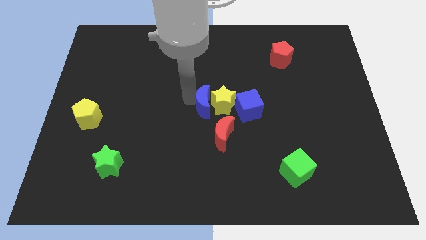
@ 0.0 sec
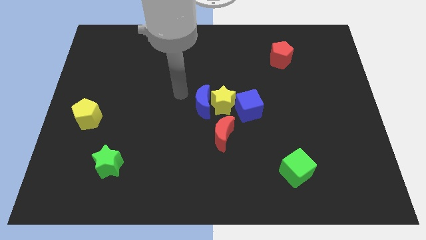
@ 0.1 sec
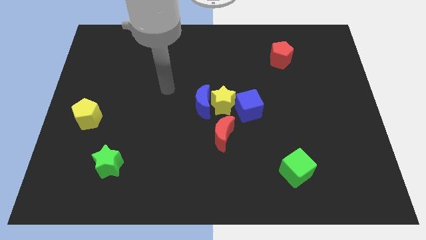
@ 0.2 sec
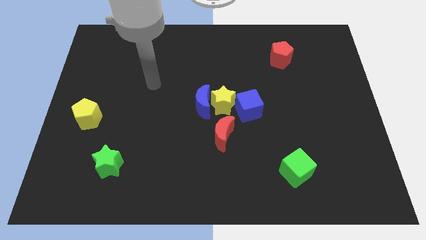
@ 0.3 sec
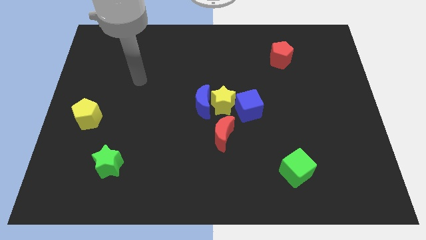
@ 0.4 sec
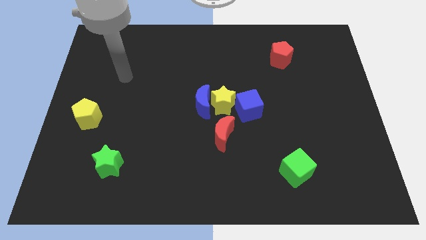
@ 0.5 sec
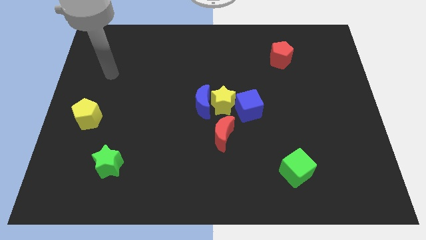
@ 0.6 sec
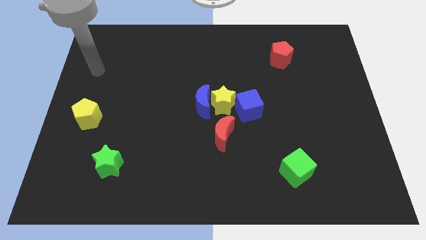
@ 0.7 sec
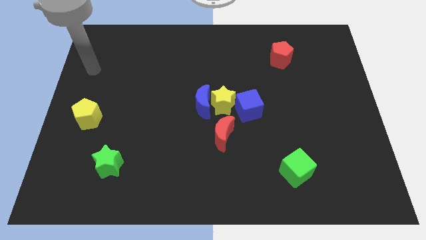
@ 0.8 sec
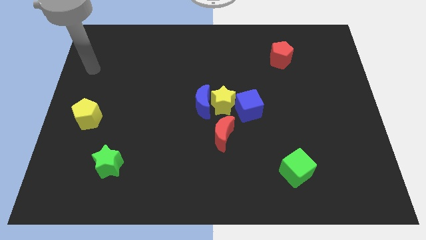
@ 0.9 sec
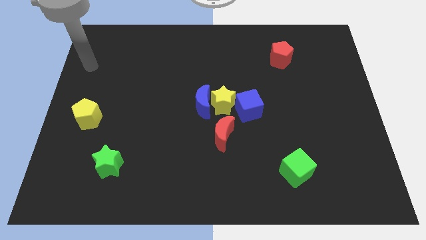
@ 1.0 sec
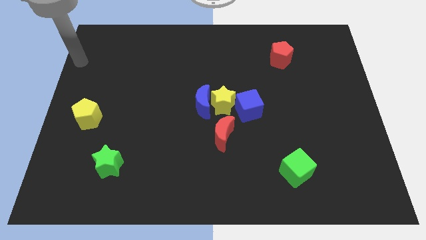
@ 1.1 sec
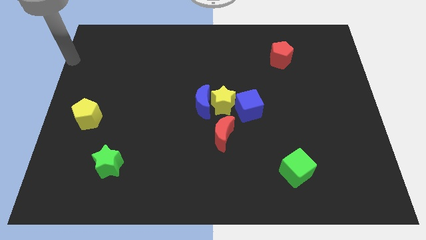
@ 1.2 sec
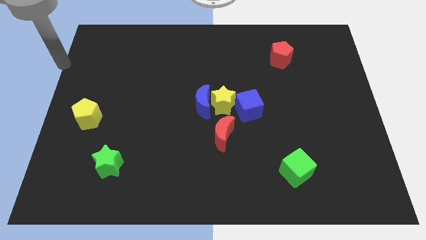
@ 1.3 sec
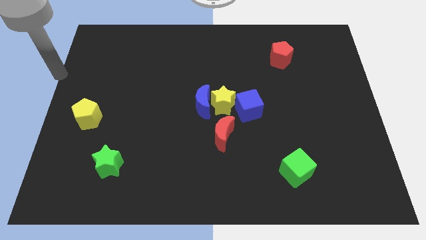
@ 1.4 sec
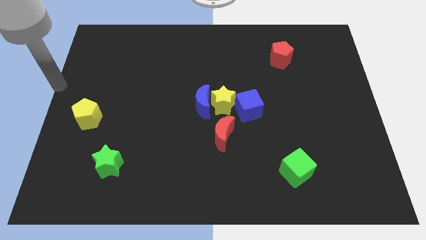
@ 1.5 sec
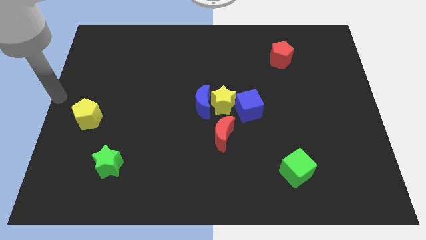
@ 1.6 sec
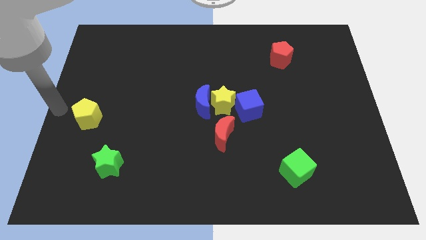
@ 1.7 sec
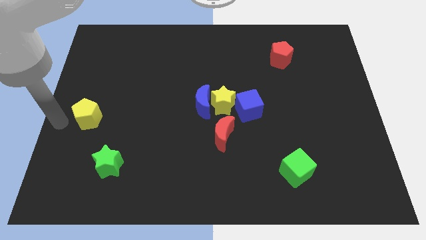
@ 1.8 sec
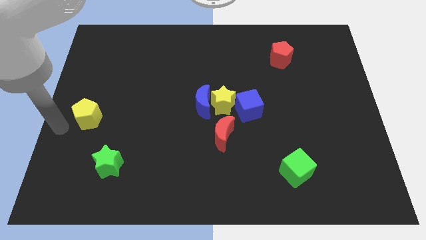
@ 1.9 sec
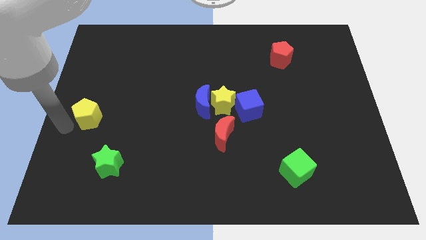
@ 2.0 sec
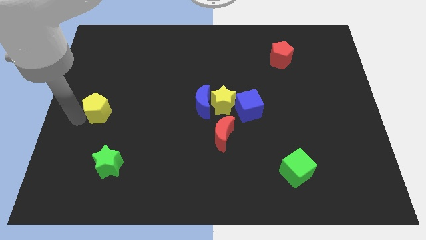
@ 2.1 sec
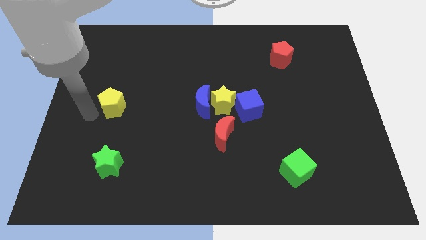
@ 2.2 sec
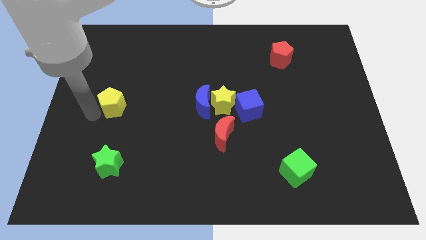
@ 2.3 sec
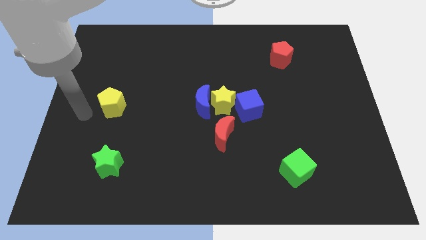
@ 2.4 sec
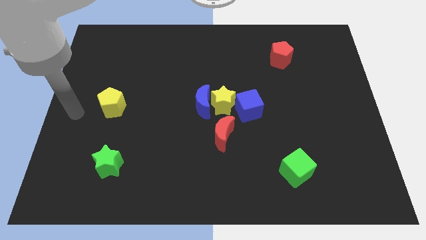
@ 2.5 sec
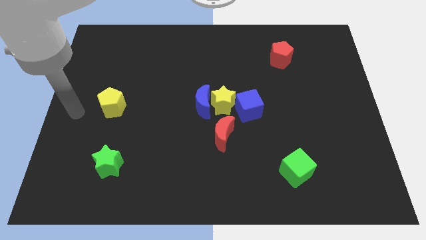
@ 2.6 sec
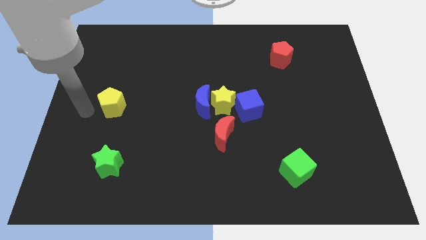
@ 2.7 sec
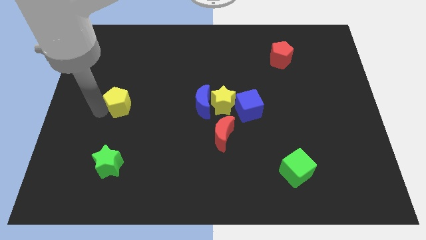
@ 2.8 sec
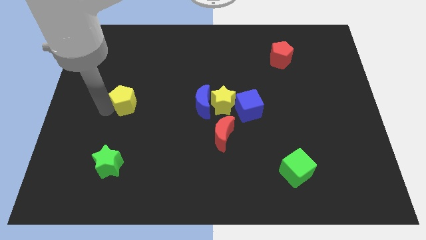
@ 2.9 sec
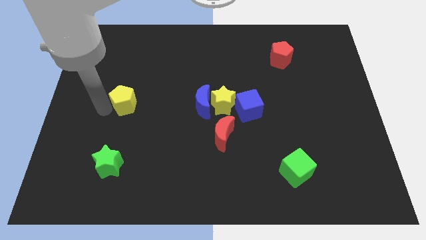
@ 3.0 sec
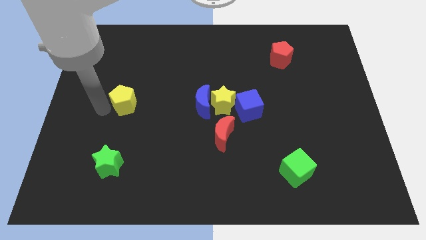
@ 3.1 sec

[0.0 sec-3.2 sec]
move the yellow pentagon vertically above the green star

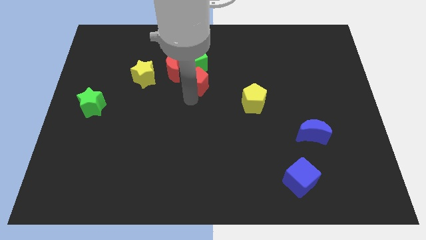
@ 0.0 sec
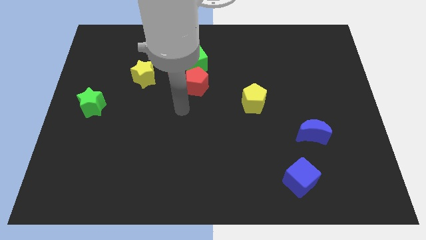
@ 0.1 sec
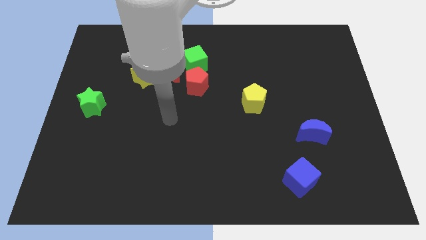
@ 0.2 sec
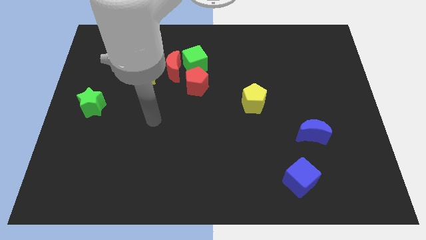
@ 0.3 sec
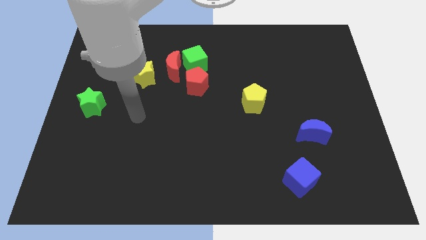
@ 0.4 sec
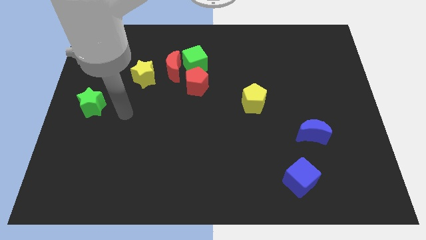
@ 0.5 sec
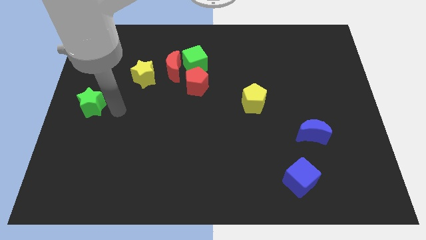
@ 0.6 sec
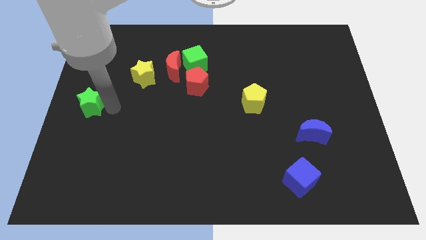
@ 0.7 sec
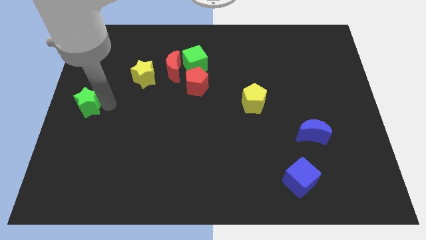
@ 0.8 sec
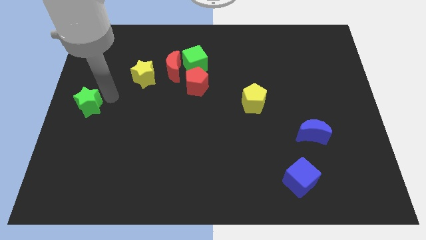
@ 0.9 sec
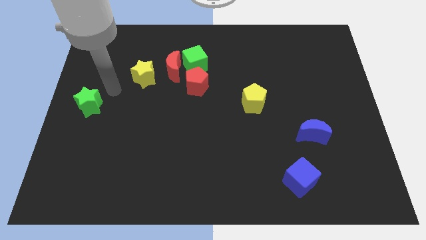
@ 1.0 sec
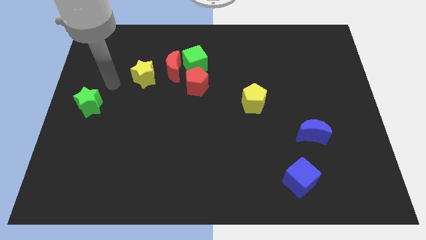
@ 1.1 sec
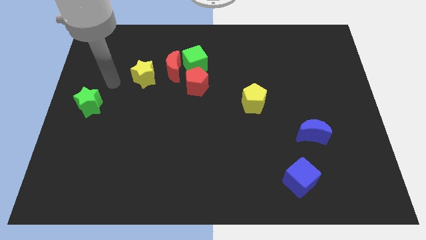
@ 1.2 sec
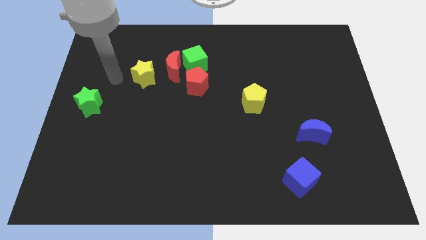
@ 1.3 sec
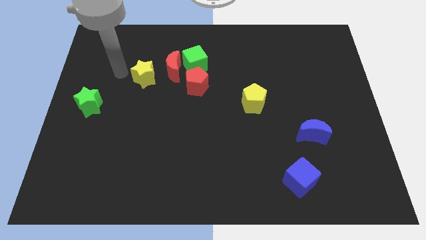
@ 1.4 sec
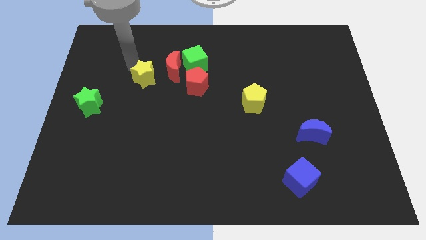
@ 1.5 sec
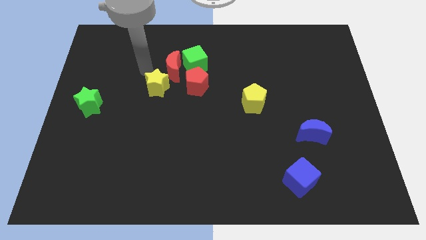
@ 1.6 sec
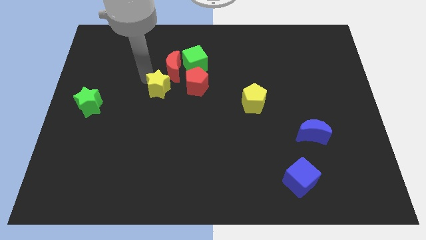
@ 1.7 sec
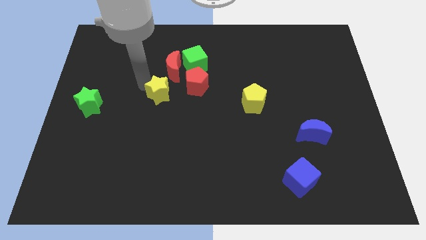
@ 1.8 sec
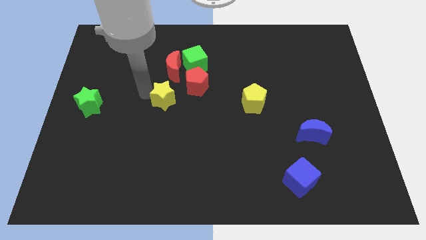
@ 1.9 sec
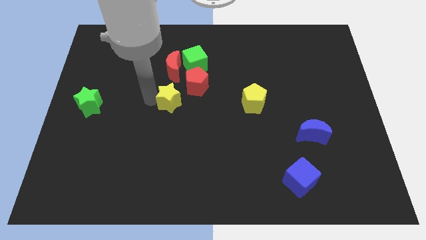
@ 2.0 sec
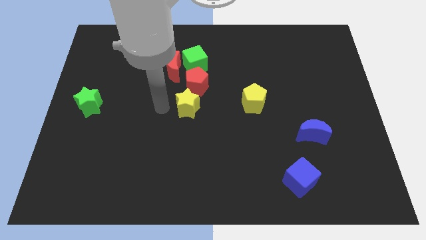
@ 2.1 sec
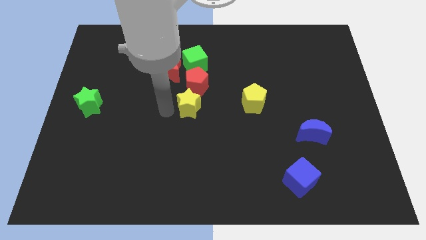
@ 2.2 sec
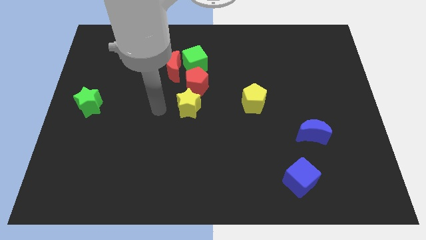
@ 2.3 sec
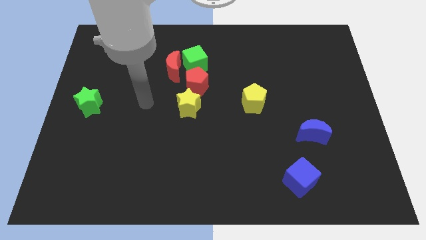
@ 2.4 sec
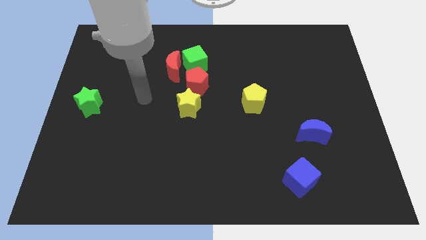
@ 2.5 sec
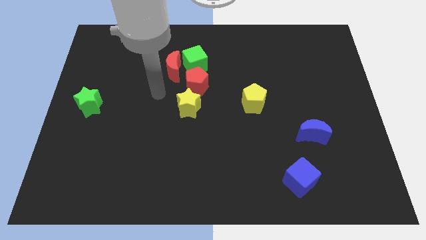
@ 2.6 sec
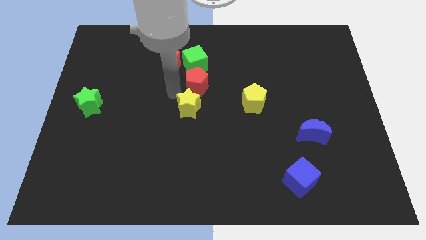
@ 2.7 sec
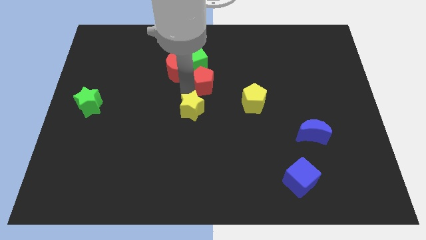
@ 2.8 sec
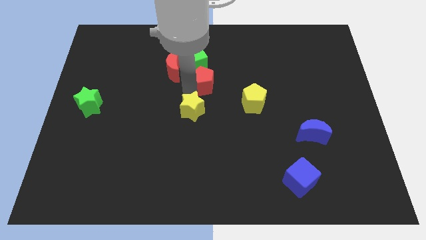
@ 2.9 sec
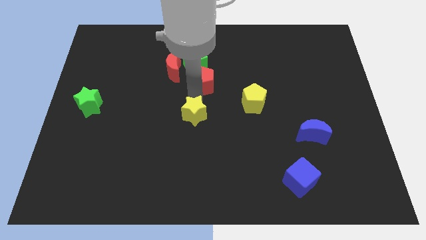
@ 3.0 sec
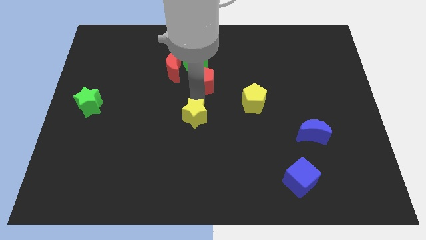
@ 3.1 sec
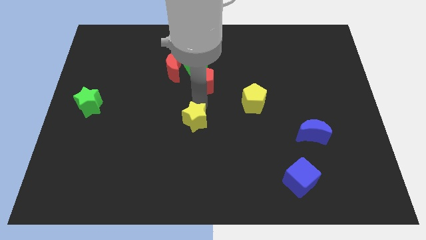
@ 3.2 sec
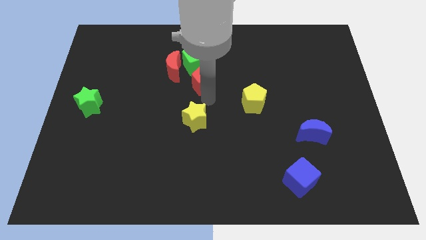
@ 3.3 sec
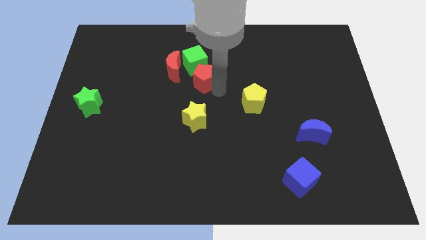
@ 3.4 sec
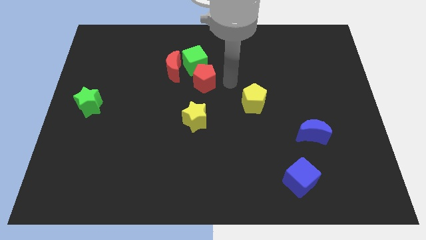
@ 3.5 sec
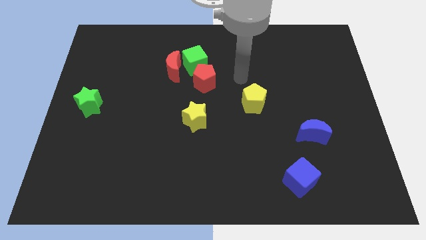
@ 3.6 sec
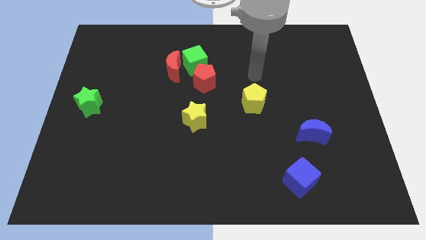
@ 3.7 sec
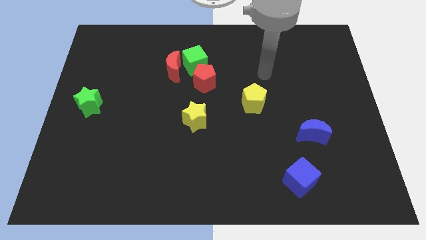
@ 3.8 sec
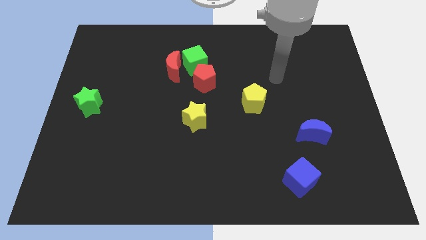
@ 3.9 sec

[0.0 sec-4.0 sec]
seperate red pentagon and yellow star

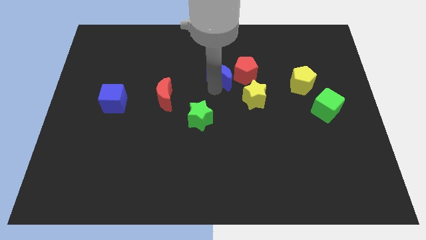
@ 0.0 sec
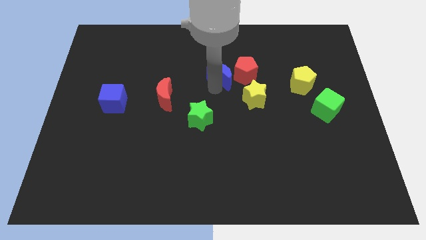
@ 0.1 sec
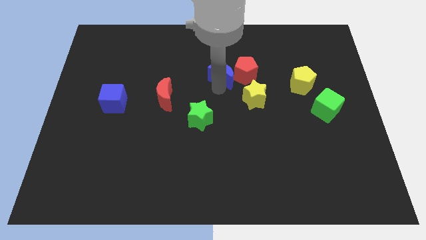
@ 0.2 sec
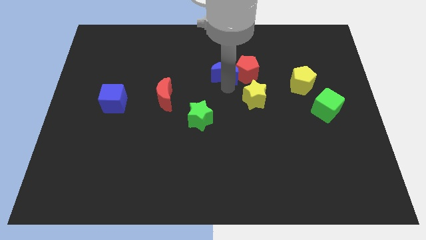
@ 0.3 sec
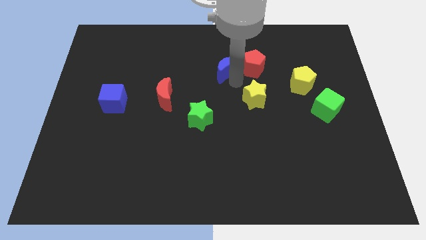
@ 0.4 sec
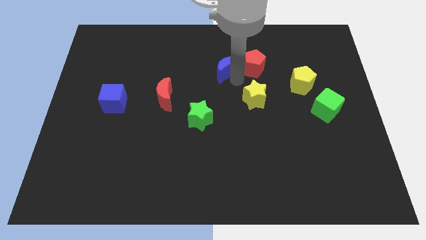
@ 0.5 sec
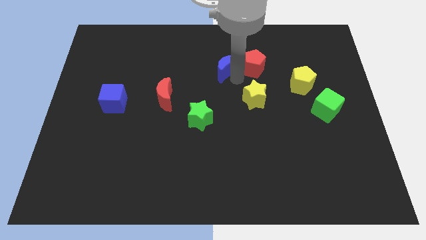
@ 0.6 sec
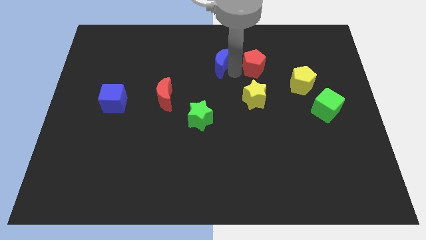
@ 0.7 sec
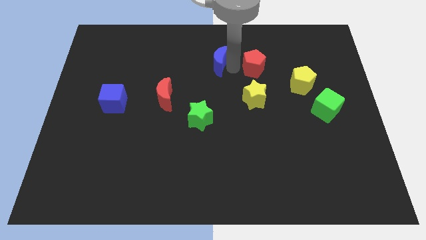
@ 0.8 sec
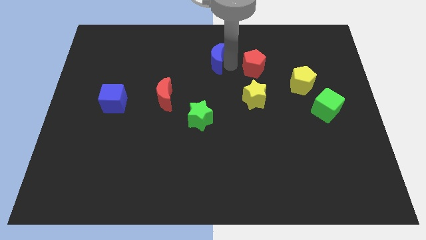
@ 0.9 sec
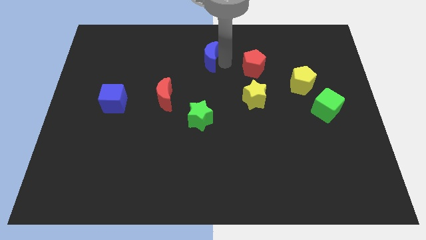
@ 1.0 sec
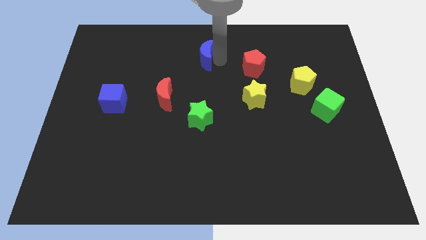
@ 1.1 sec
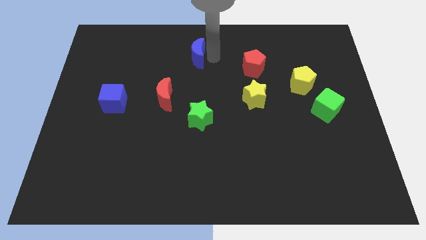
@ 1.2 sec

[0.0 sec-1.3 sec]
push blue crescent above green star

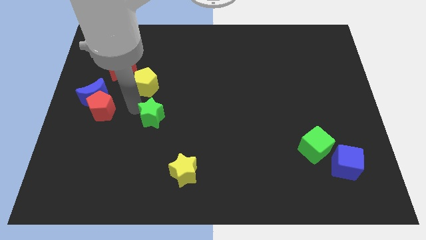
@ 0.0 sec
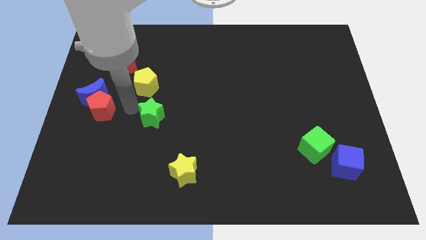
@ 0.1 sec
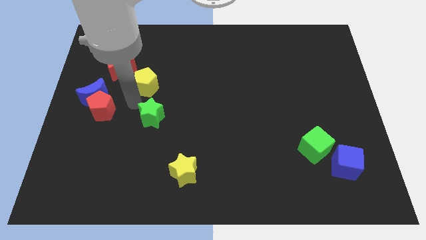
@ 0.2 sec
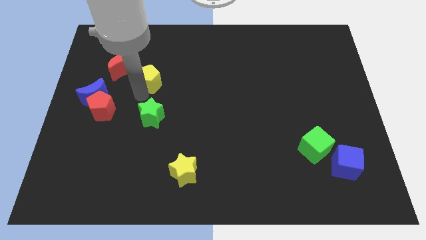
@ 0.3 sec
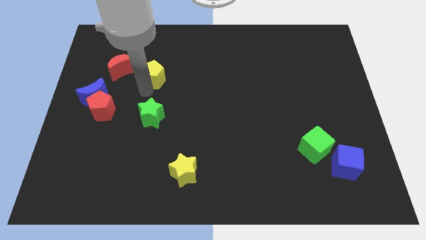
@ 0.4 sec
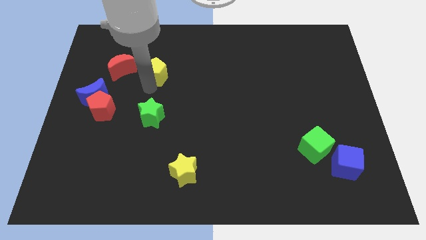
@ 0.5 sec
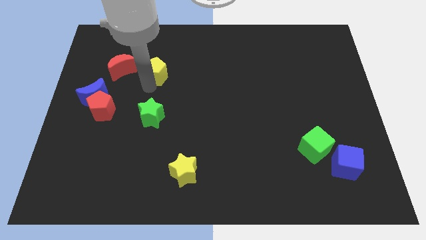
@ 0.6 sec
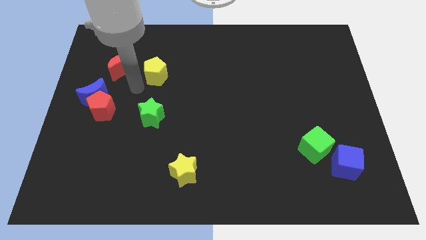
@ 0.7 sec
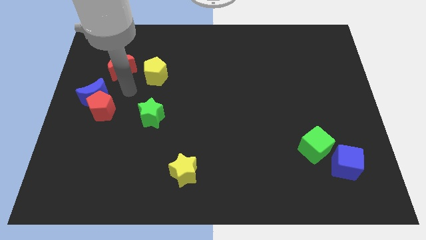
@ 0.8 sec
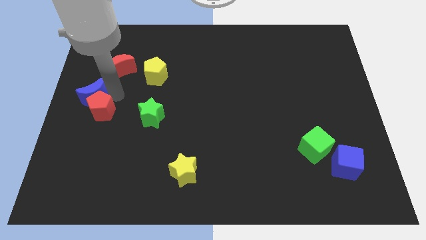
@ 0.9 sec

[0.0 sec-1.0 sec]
push the yellow pentagon towards the top side of the board
